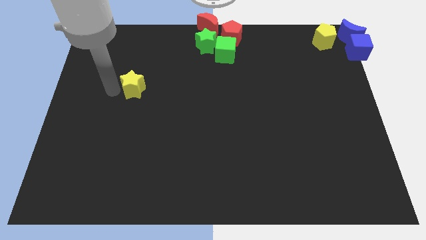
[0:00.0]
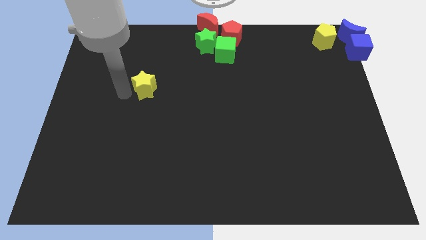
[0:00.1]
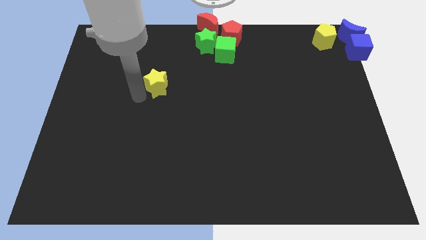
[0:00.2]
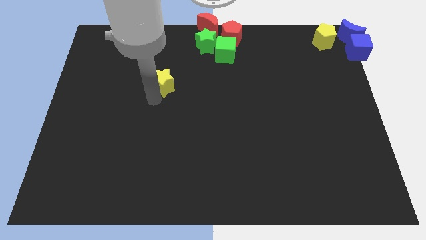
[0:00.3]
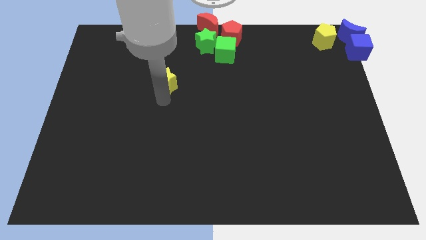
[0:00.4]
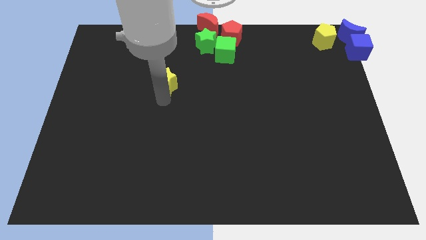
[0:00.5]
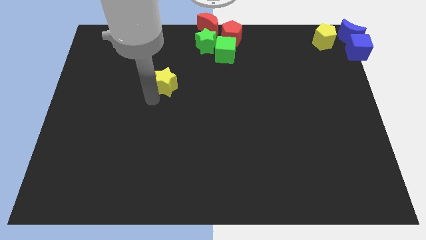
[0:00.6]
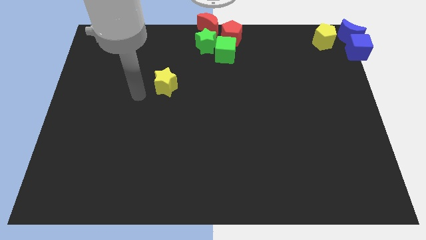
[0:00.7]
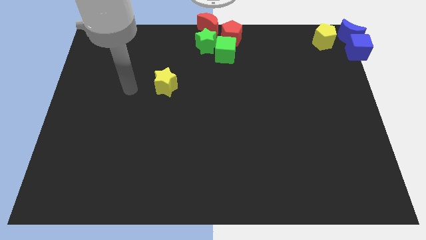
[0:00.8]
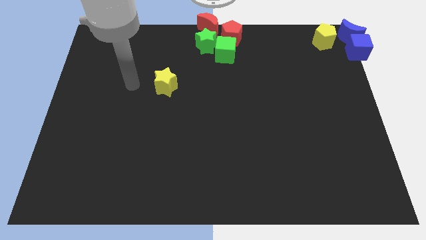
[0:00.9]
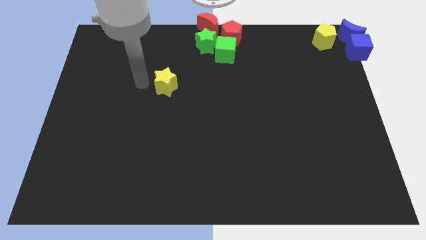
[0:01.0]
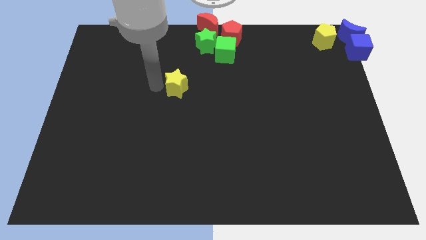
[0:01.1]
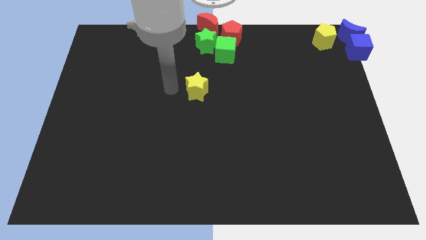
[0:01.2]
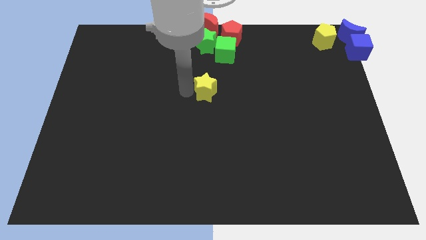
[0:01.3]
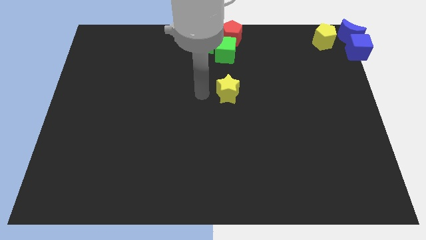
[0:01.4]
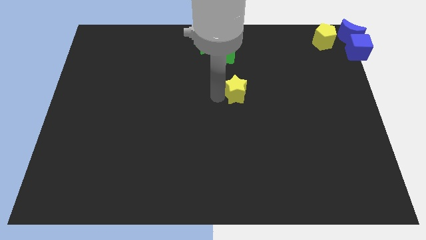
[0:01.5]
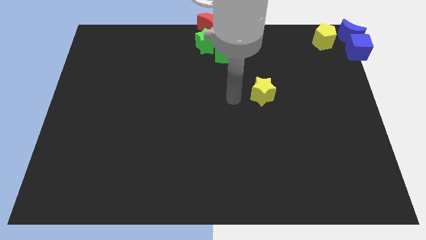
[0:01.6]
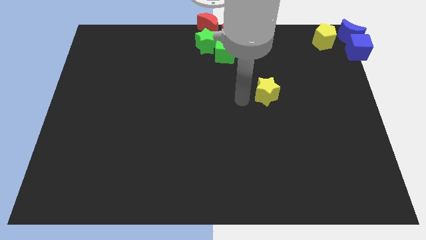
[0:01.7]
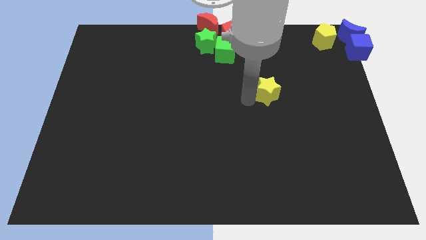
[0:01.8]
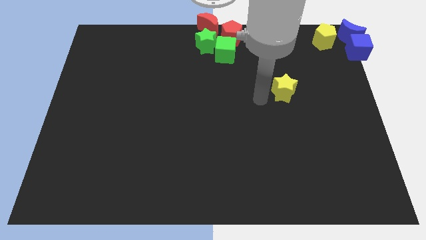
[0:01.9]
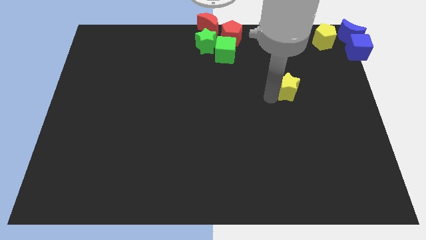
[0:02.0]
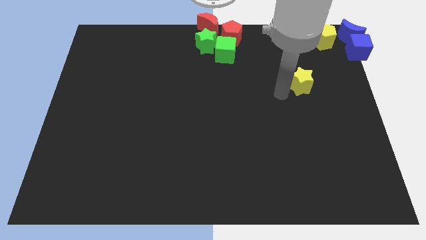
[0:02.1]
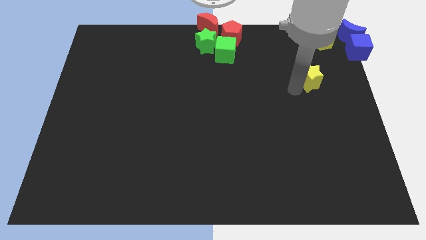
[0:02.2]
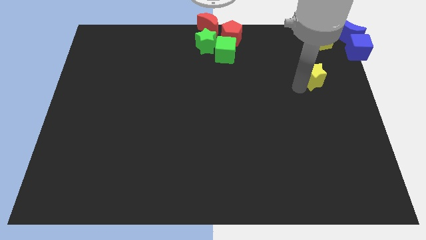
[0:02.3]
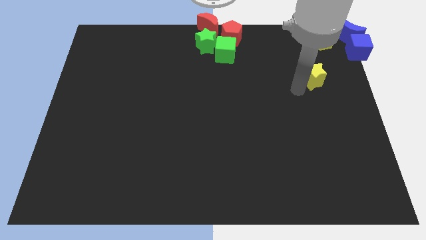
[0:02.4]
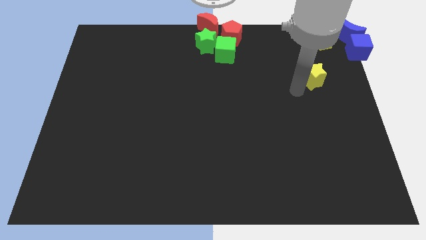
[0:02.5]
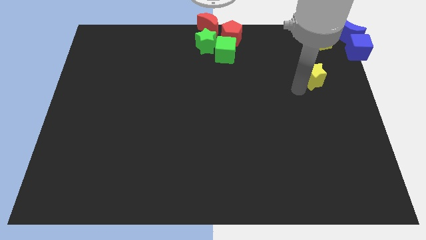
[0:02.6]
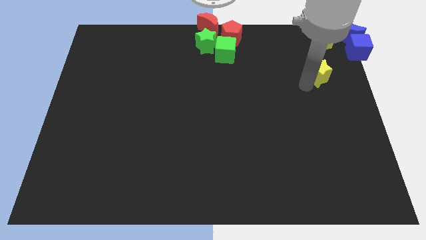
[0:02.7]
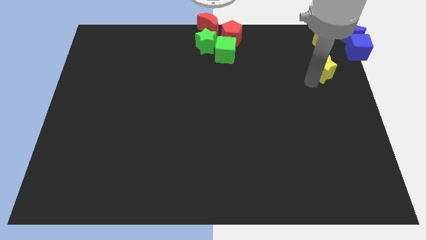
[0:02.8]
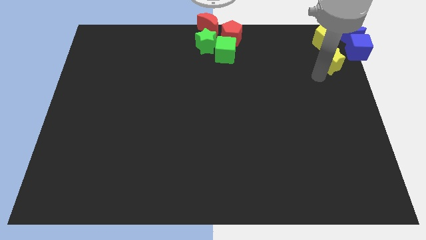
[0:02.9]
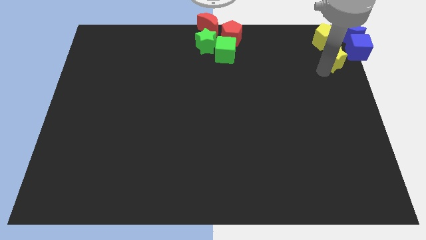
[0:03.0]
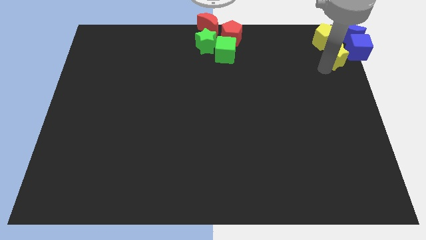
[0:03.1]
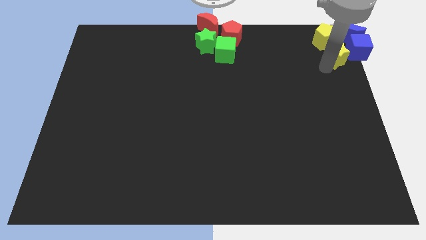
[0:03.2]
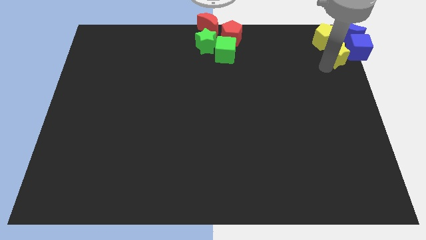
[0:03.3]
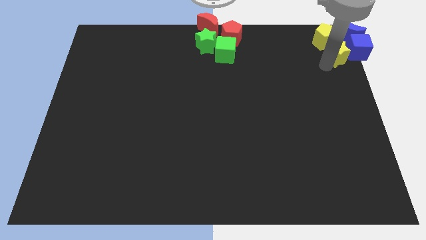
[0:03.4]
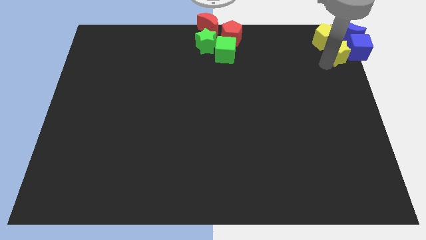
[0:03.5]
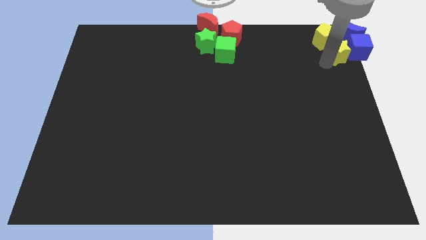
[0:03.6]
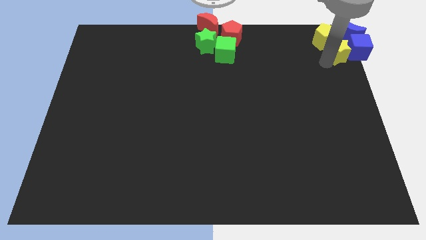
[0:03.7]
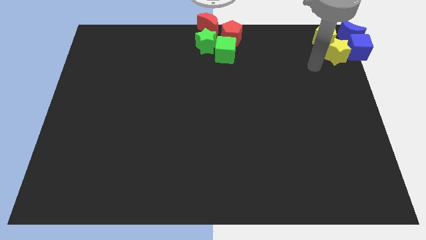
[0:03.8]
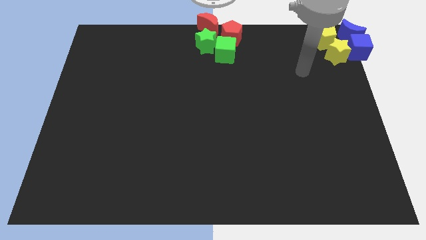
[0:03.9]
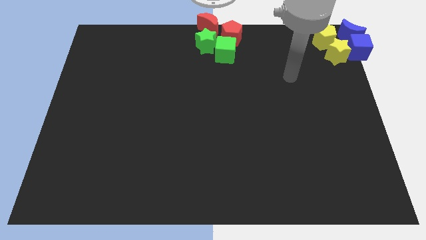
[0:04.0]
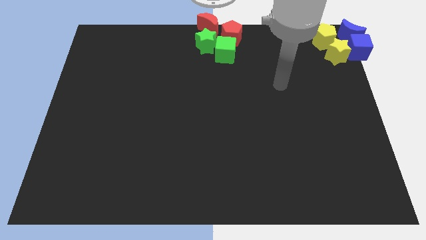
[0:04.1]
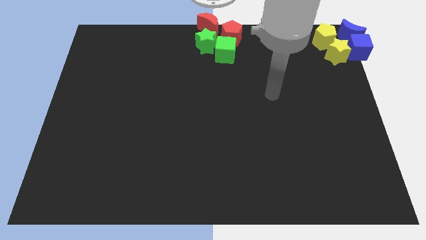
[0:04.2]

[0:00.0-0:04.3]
push the yellow star under the yellow pentagon

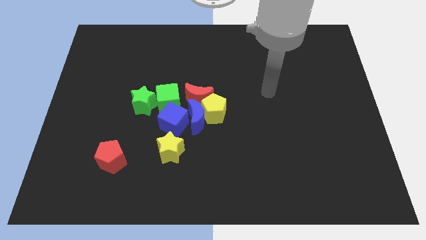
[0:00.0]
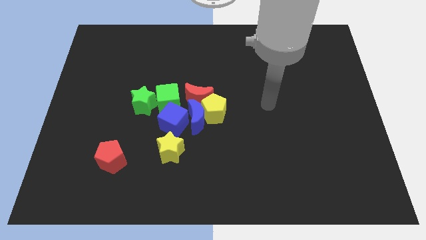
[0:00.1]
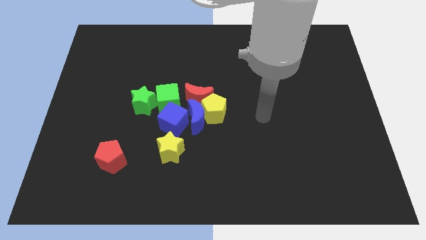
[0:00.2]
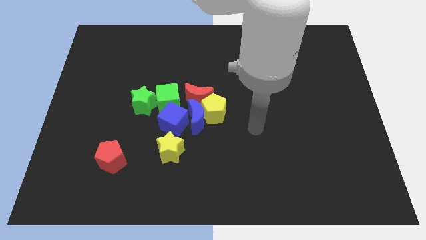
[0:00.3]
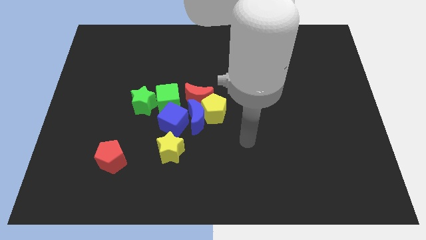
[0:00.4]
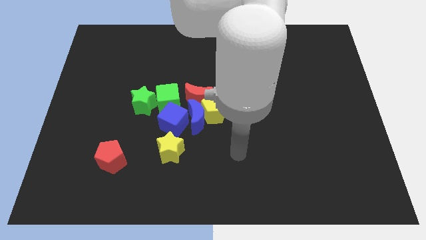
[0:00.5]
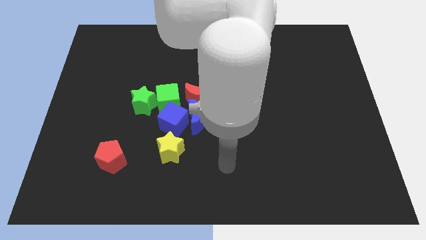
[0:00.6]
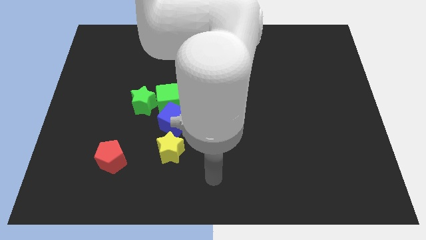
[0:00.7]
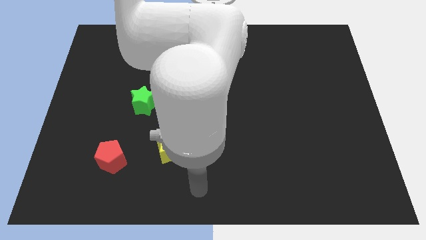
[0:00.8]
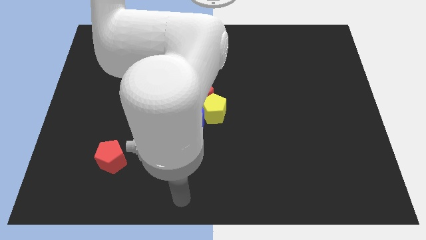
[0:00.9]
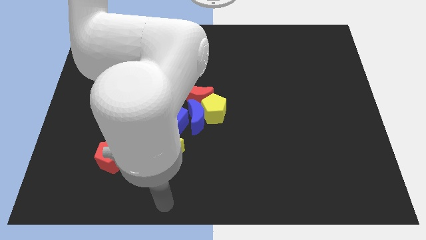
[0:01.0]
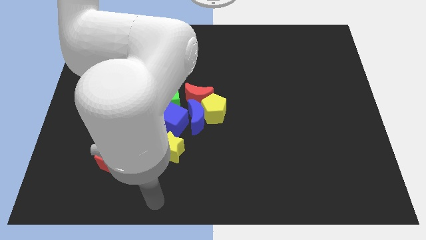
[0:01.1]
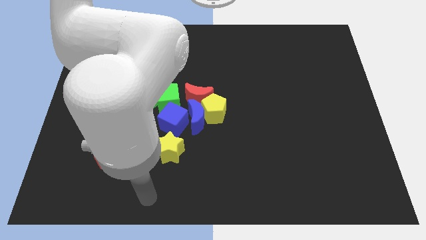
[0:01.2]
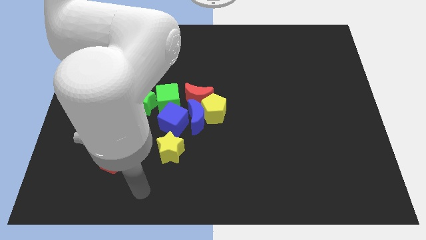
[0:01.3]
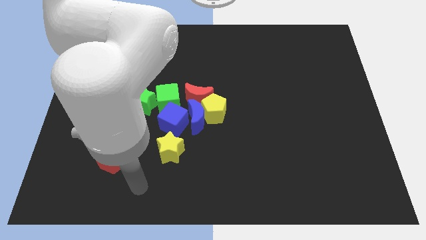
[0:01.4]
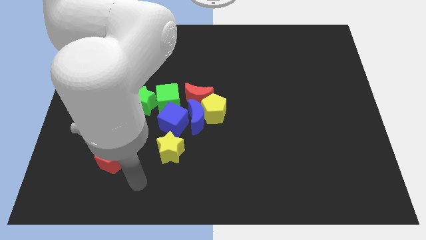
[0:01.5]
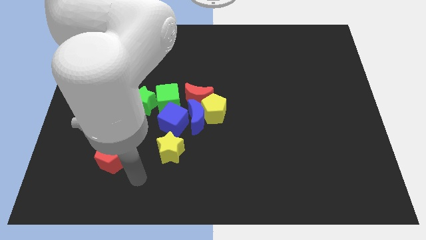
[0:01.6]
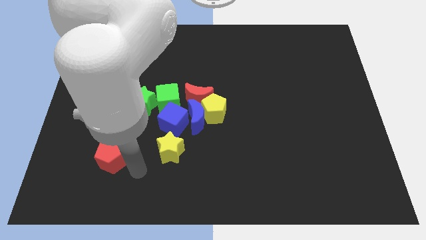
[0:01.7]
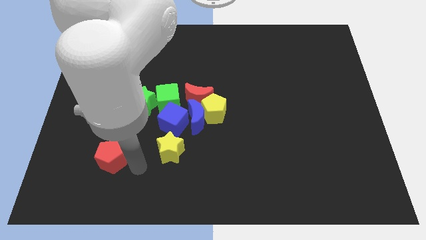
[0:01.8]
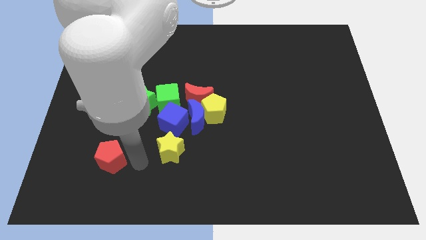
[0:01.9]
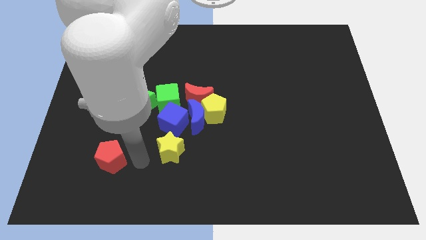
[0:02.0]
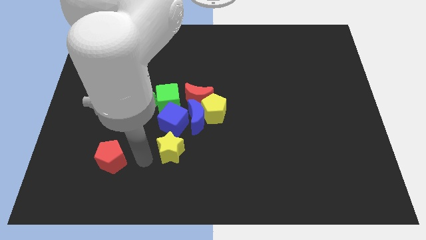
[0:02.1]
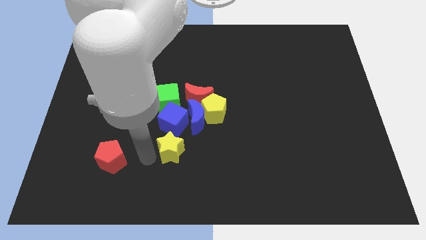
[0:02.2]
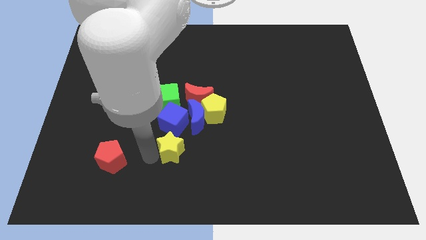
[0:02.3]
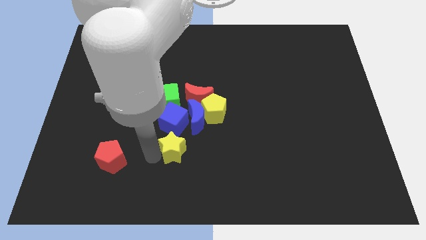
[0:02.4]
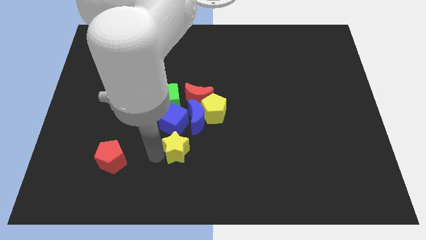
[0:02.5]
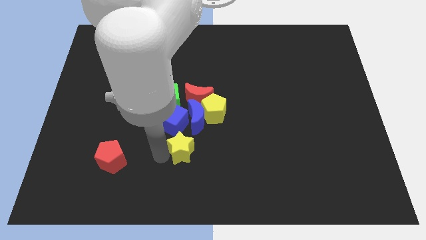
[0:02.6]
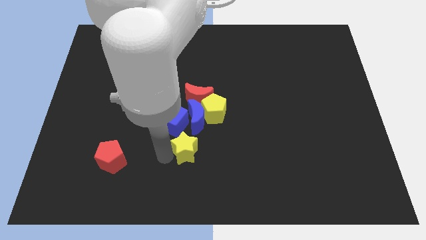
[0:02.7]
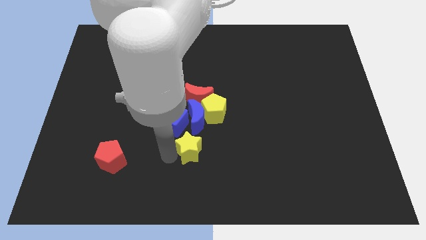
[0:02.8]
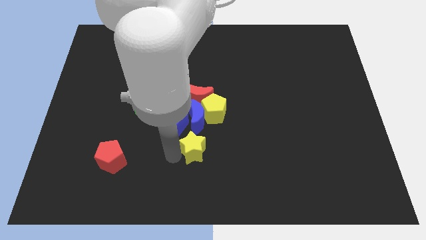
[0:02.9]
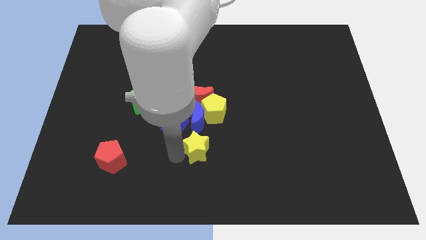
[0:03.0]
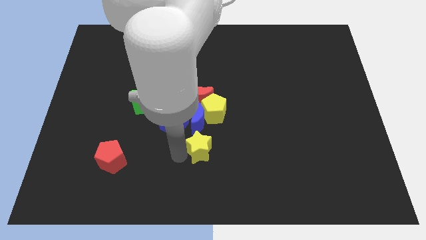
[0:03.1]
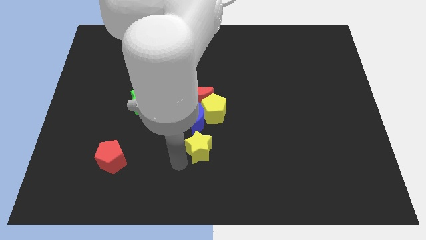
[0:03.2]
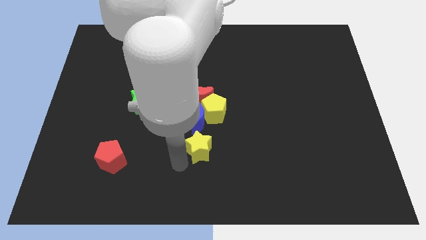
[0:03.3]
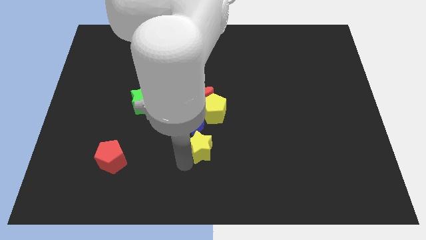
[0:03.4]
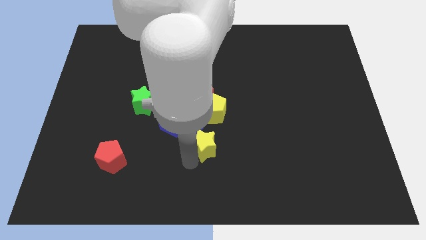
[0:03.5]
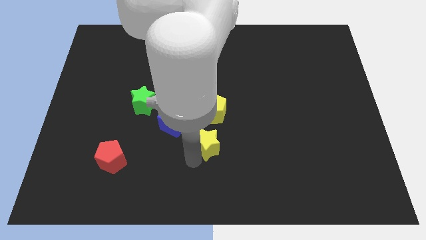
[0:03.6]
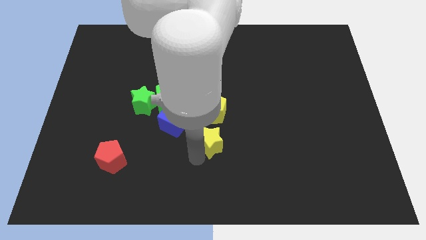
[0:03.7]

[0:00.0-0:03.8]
push yellow star towards the bottom of the blue cube

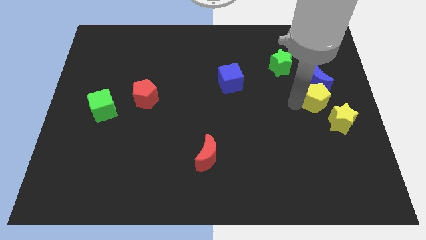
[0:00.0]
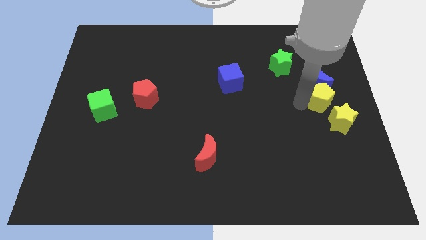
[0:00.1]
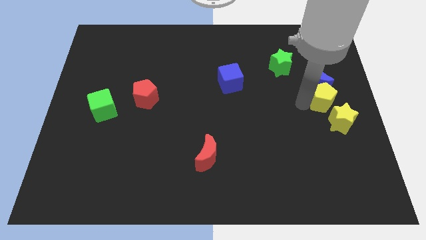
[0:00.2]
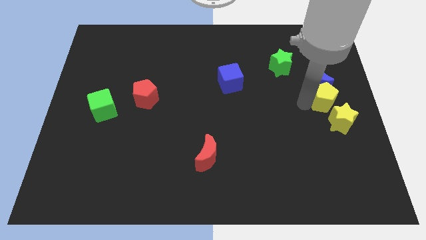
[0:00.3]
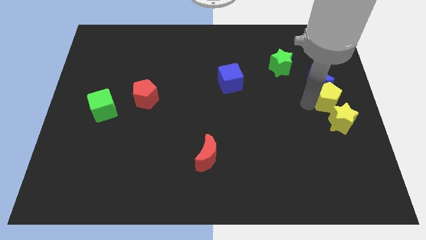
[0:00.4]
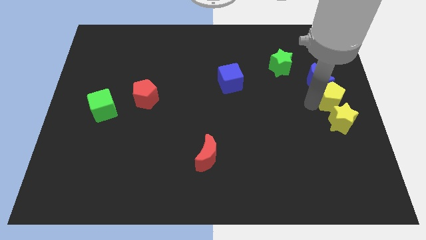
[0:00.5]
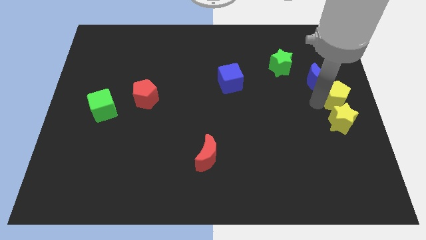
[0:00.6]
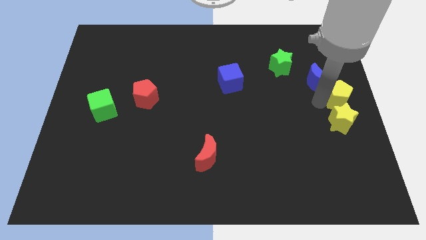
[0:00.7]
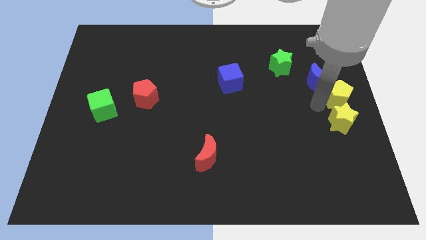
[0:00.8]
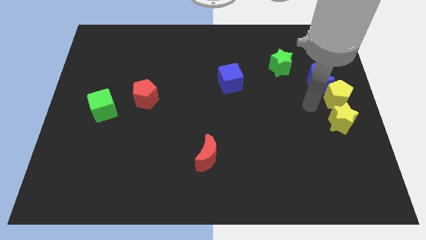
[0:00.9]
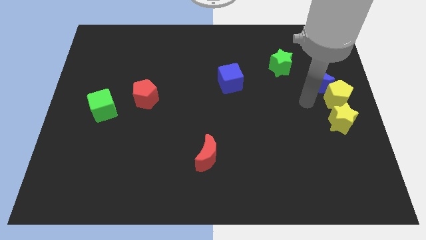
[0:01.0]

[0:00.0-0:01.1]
move the yellow pentagon above to the yellow star
